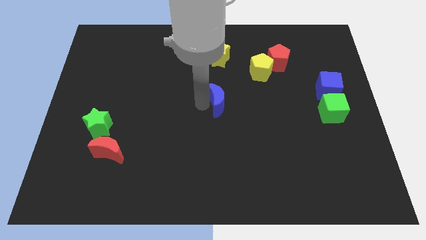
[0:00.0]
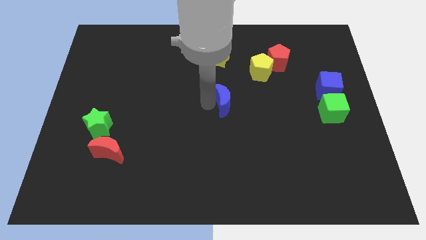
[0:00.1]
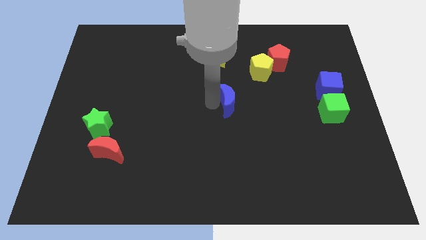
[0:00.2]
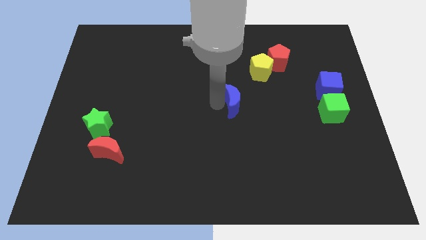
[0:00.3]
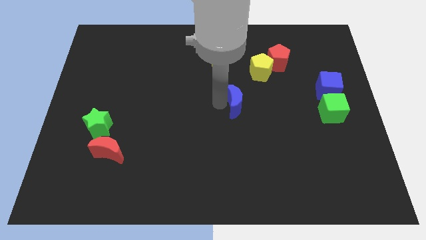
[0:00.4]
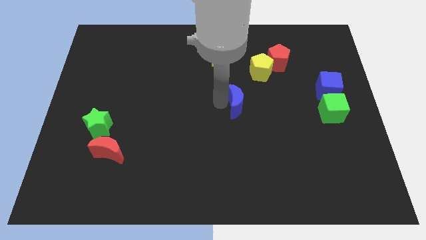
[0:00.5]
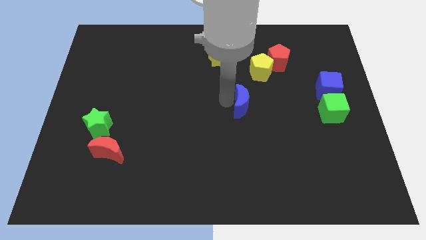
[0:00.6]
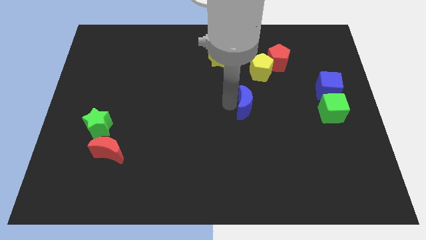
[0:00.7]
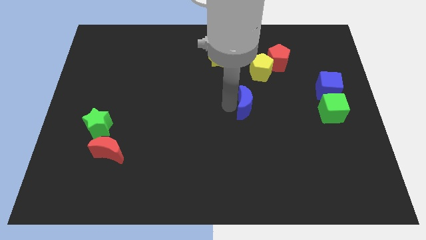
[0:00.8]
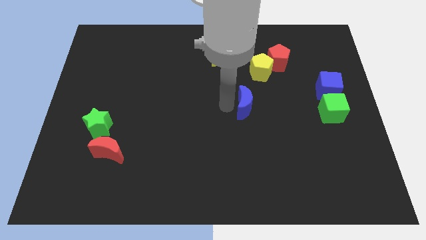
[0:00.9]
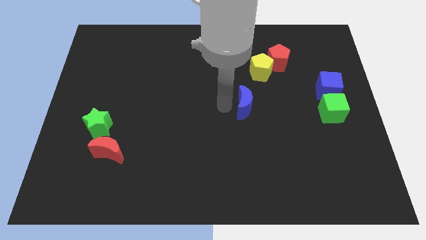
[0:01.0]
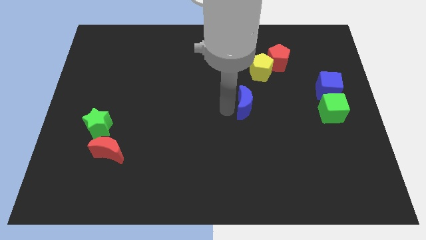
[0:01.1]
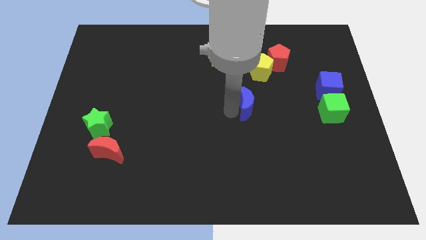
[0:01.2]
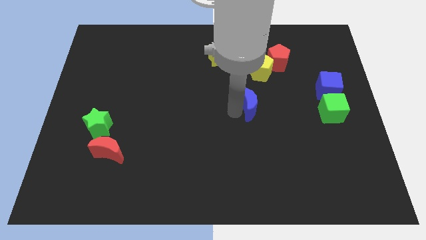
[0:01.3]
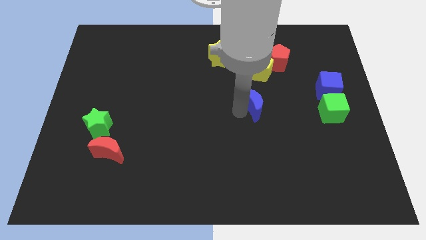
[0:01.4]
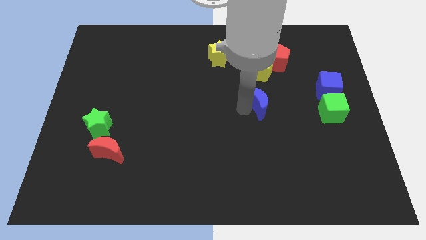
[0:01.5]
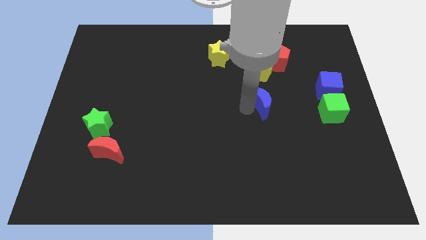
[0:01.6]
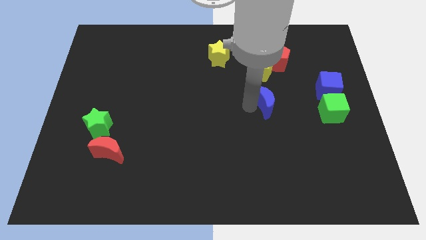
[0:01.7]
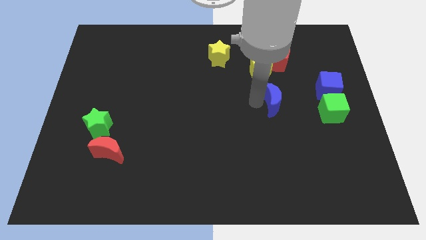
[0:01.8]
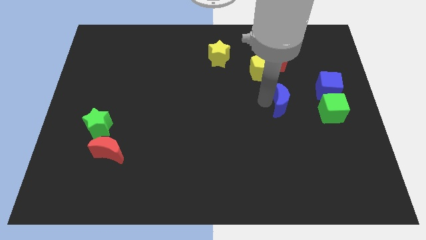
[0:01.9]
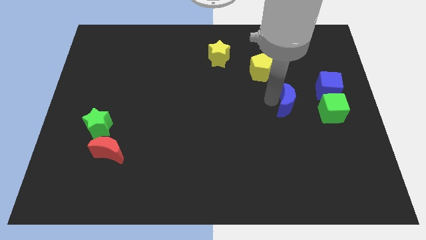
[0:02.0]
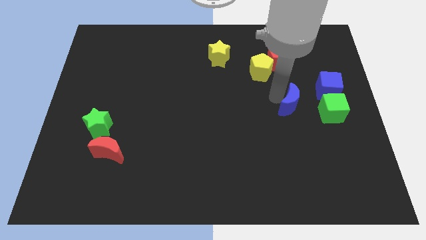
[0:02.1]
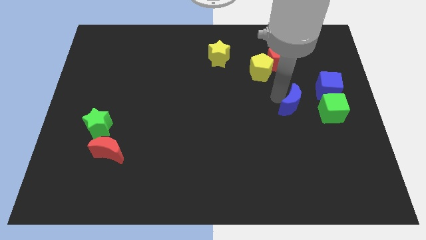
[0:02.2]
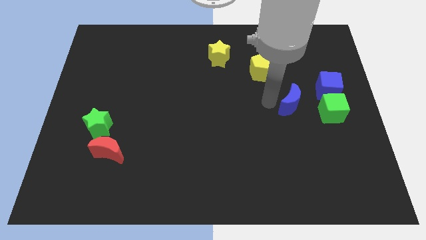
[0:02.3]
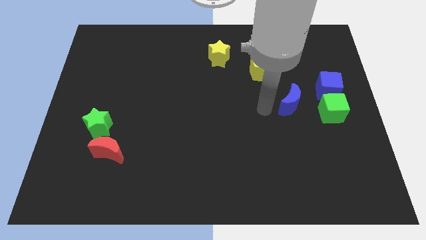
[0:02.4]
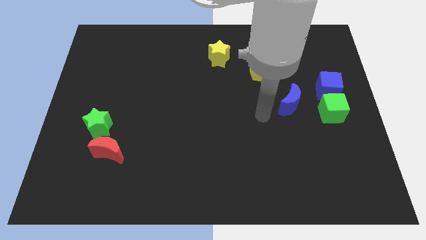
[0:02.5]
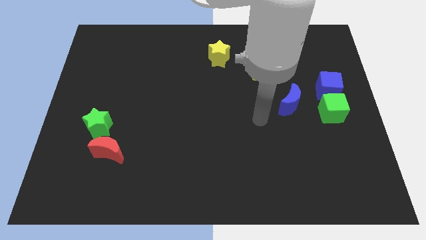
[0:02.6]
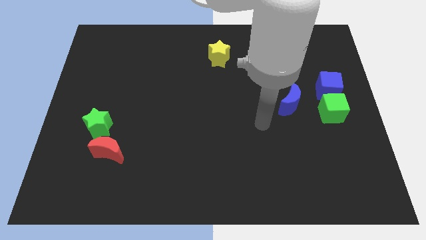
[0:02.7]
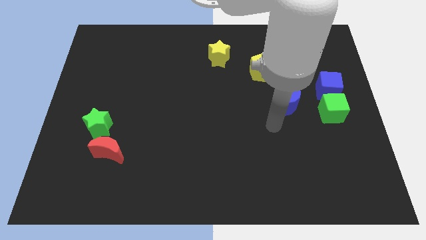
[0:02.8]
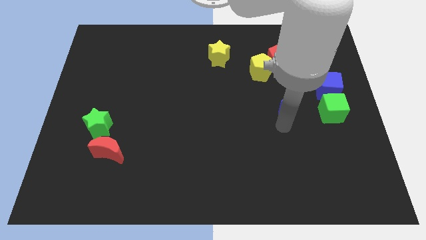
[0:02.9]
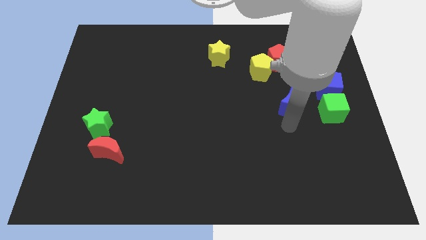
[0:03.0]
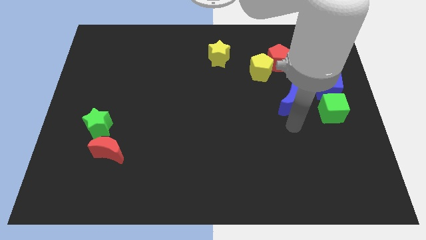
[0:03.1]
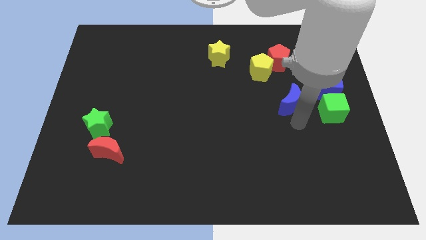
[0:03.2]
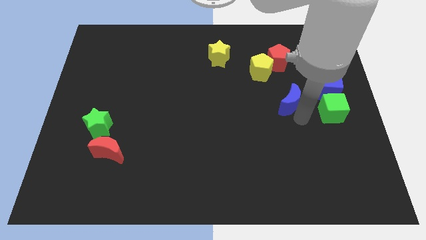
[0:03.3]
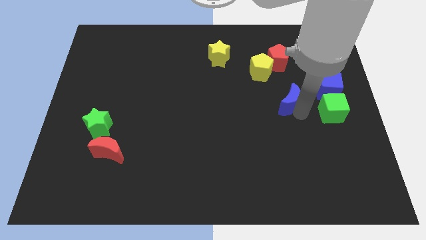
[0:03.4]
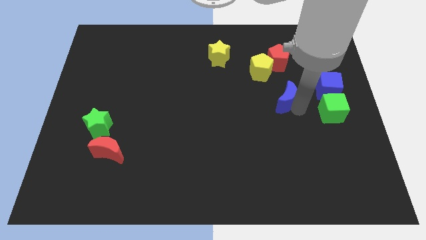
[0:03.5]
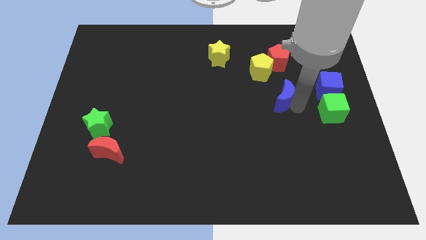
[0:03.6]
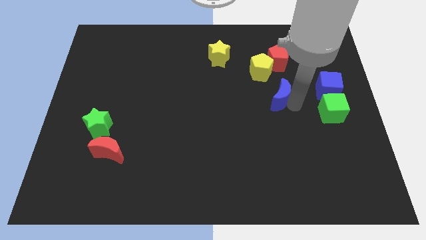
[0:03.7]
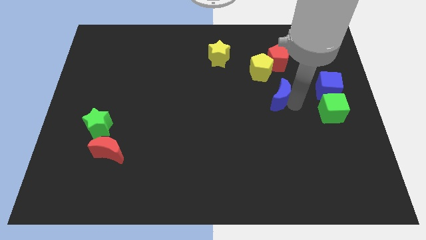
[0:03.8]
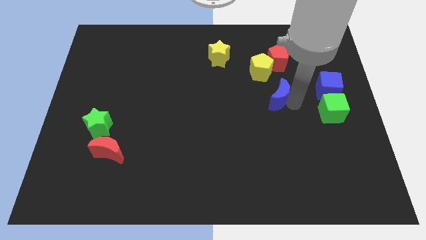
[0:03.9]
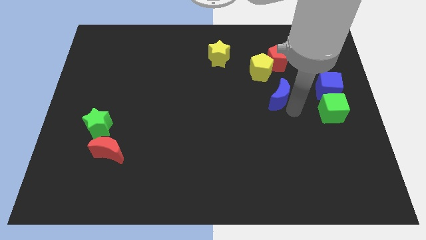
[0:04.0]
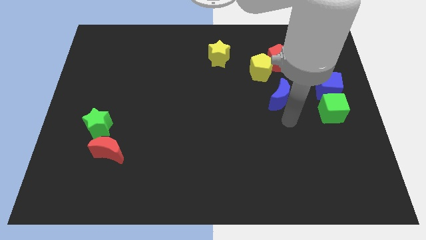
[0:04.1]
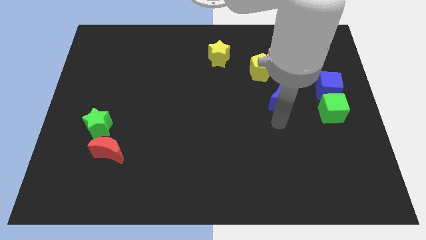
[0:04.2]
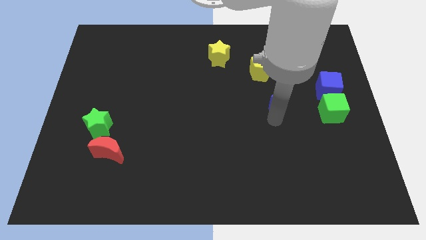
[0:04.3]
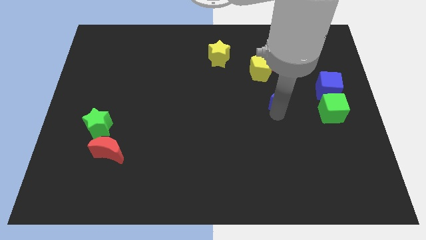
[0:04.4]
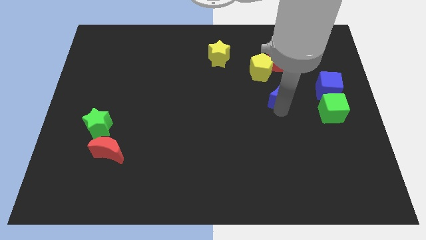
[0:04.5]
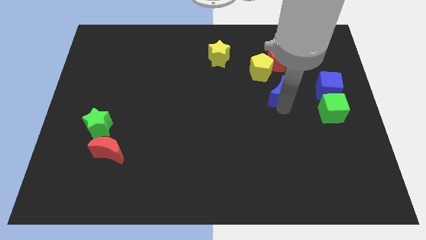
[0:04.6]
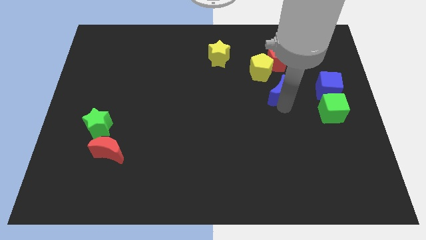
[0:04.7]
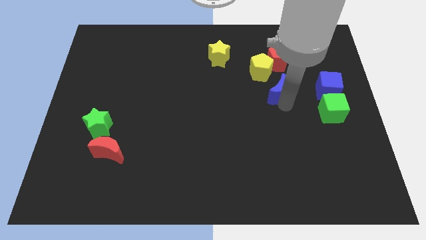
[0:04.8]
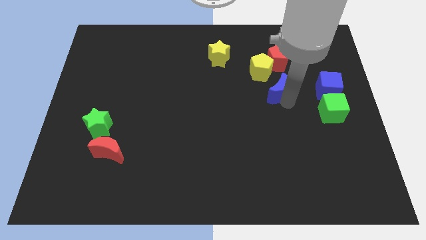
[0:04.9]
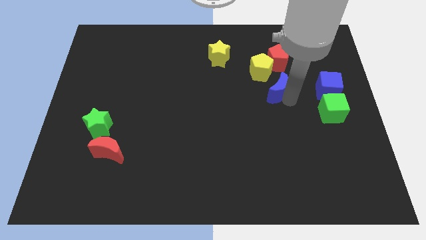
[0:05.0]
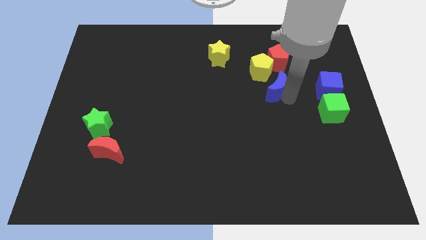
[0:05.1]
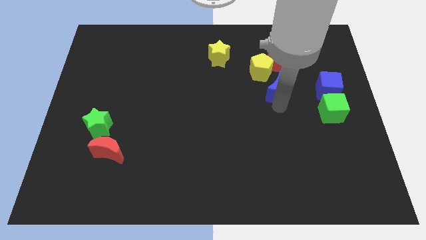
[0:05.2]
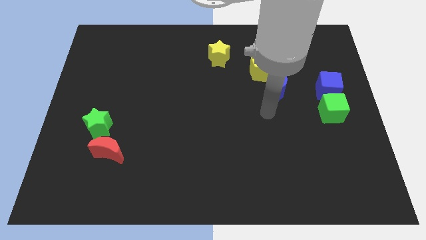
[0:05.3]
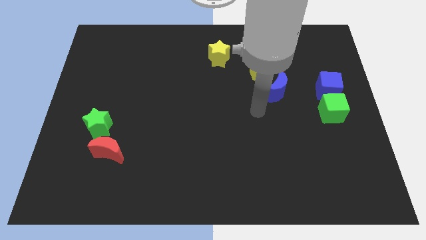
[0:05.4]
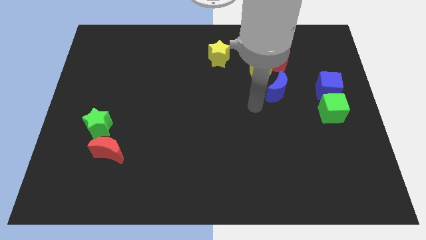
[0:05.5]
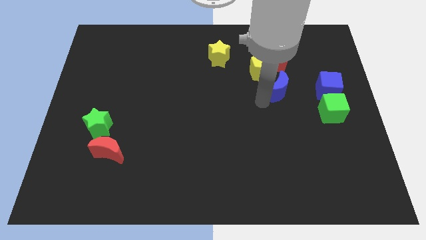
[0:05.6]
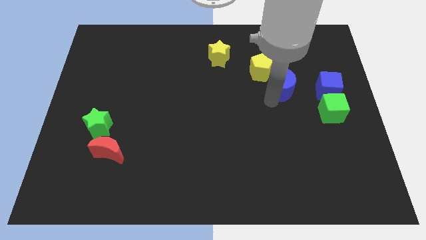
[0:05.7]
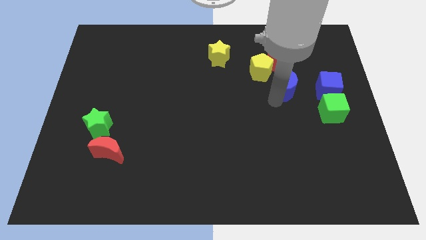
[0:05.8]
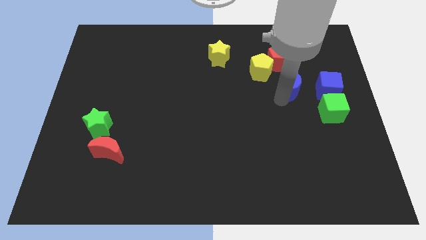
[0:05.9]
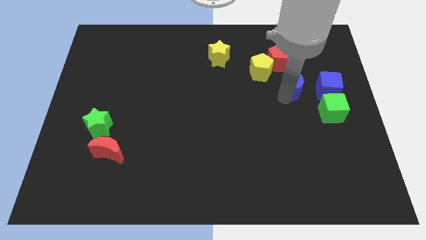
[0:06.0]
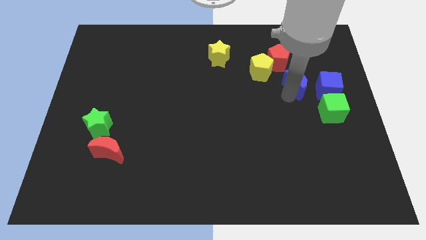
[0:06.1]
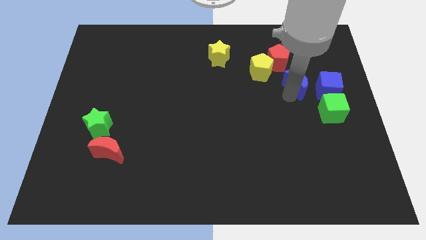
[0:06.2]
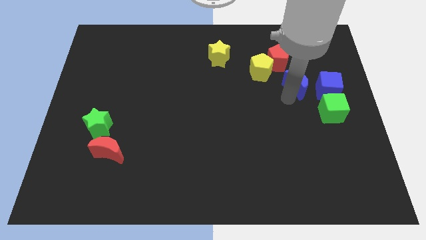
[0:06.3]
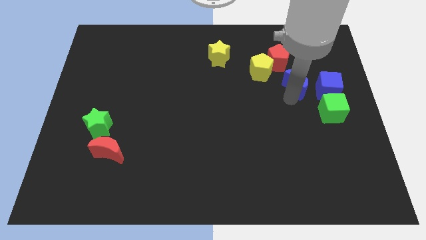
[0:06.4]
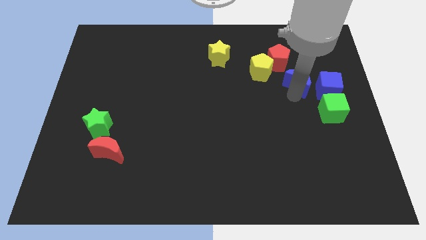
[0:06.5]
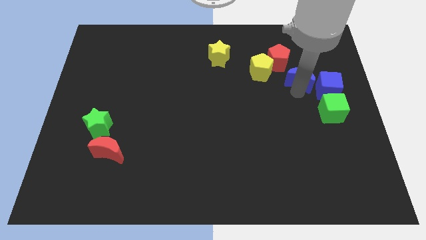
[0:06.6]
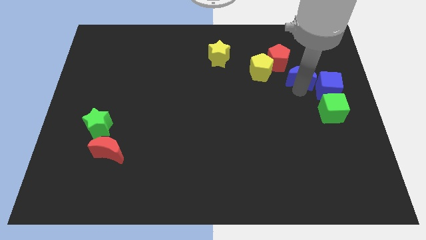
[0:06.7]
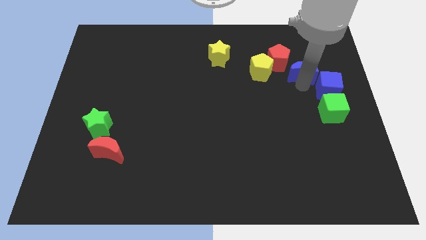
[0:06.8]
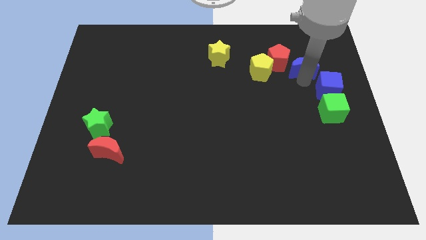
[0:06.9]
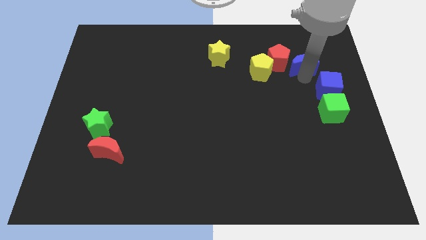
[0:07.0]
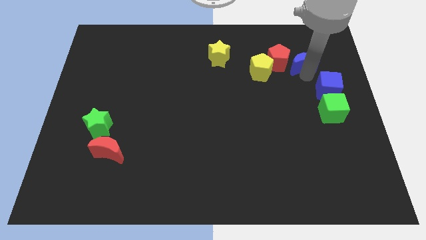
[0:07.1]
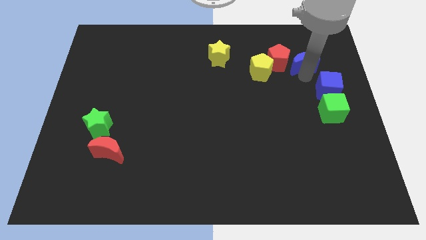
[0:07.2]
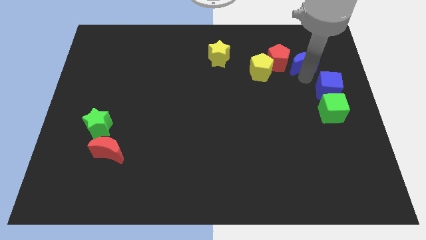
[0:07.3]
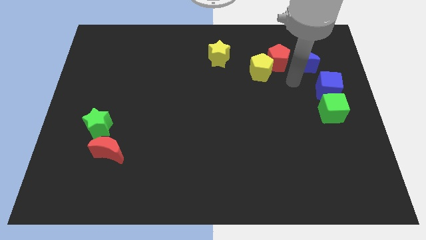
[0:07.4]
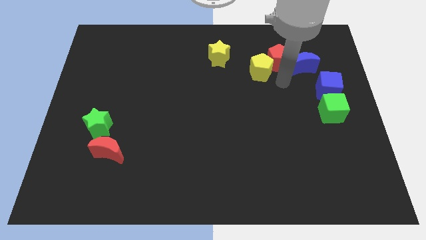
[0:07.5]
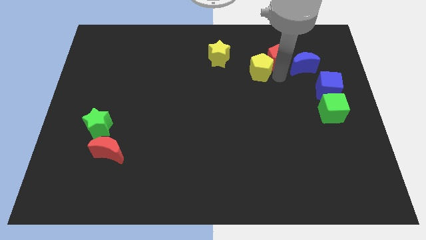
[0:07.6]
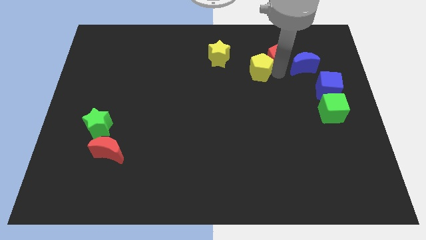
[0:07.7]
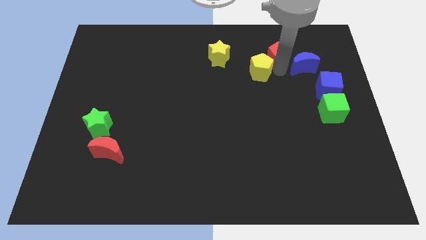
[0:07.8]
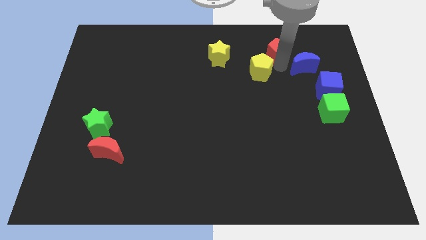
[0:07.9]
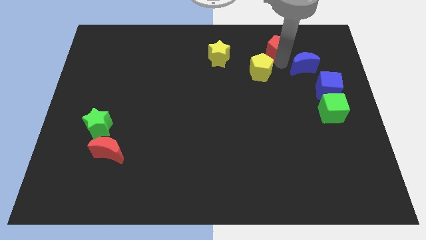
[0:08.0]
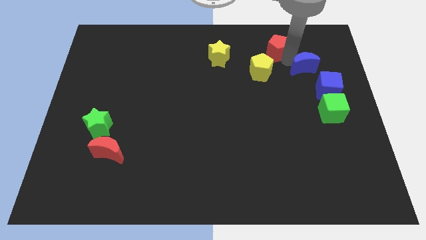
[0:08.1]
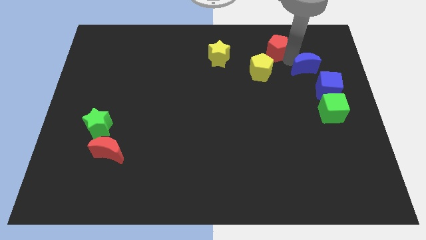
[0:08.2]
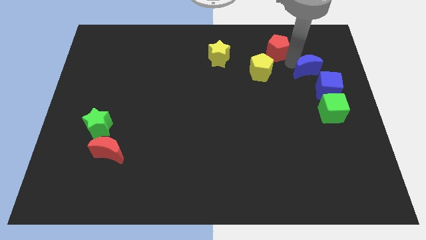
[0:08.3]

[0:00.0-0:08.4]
place the blue crescent diagonally top left to the blue cube

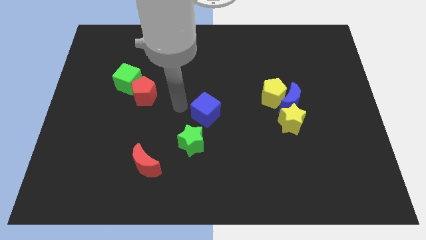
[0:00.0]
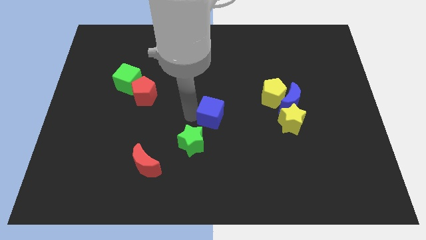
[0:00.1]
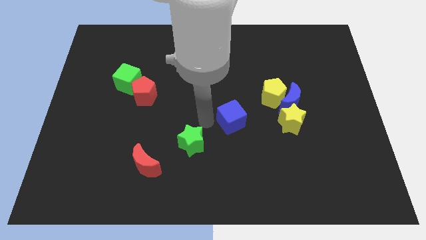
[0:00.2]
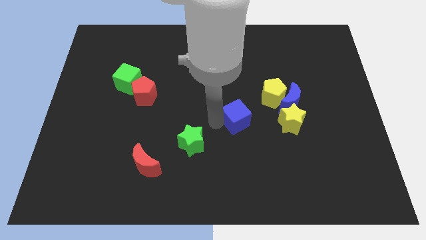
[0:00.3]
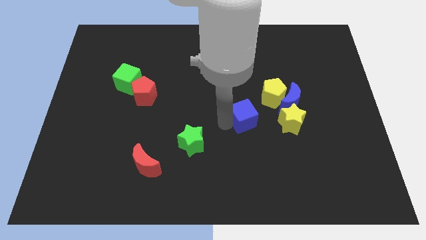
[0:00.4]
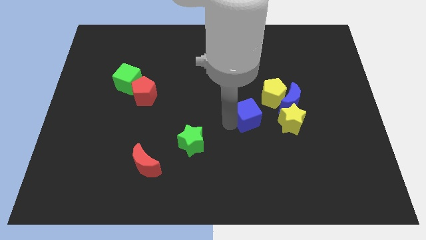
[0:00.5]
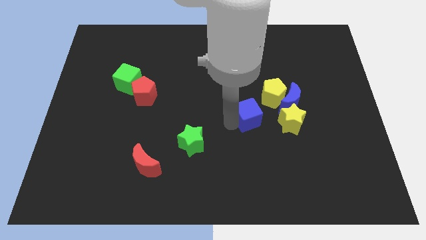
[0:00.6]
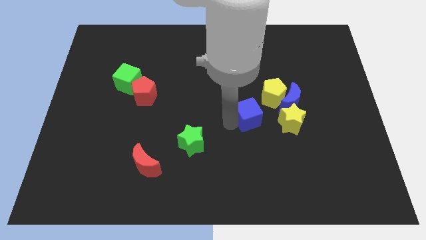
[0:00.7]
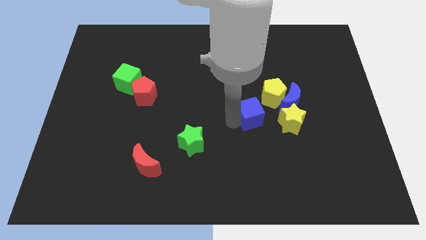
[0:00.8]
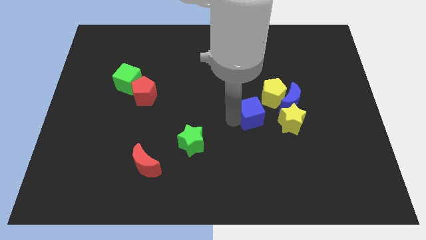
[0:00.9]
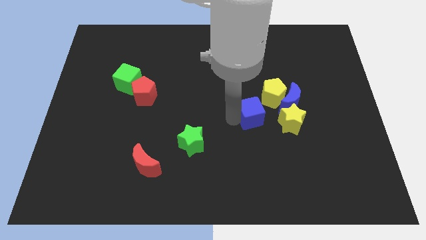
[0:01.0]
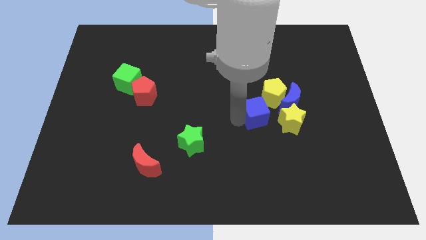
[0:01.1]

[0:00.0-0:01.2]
push the blue cube to the left side of blue crescent
